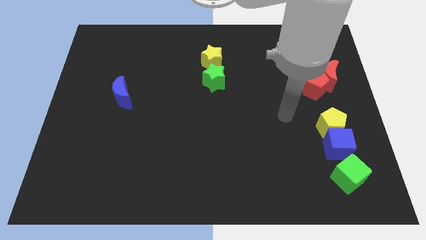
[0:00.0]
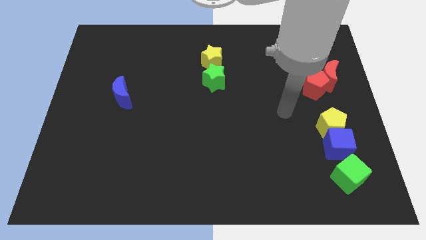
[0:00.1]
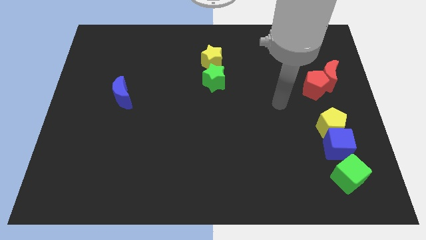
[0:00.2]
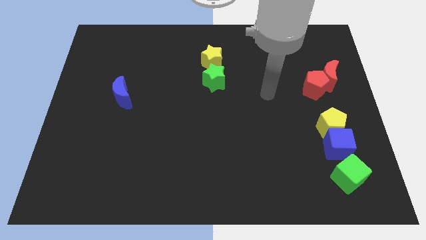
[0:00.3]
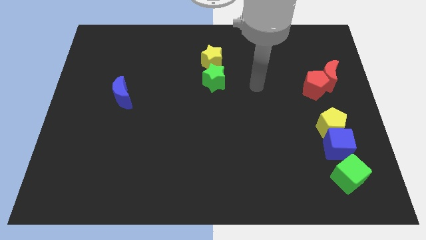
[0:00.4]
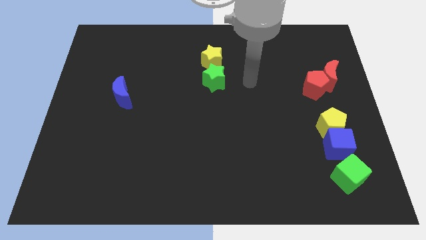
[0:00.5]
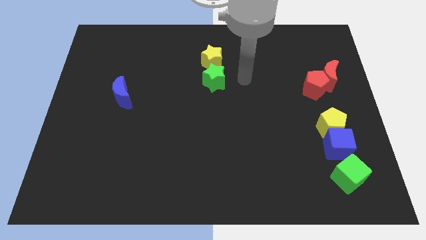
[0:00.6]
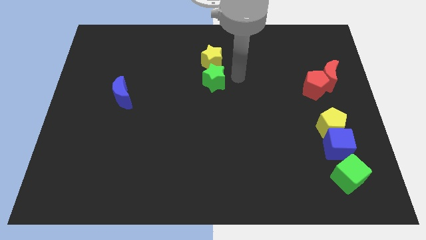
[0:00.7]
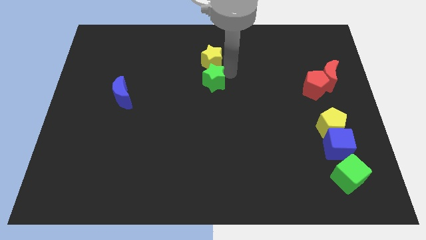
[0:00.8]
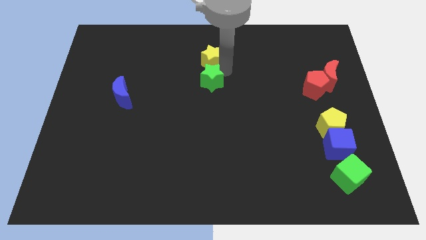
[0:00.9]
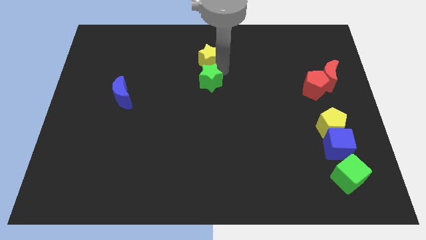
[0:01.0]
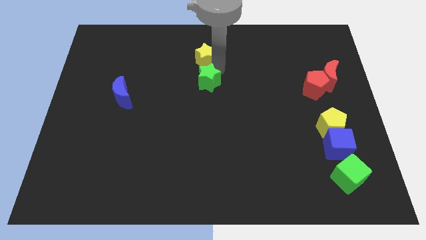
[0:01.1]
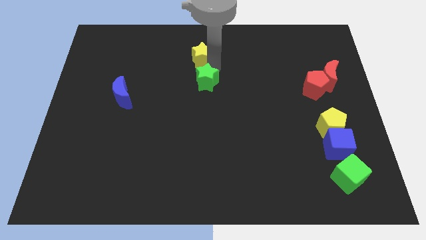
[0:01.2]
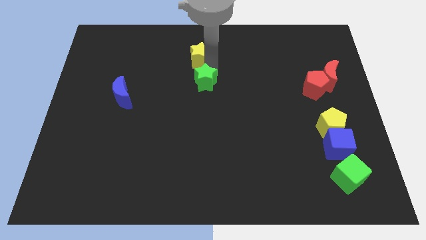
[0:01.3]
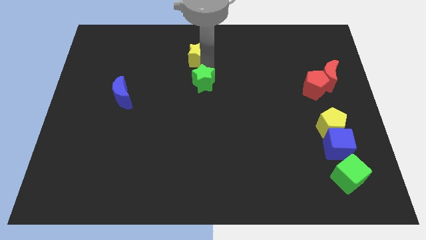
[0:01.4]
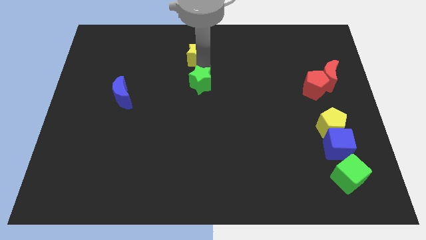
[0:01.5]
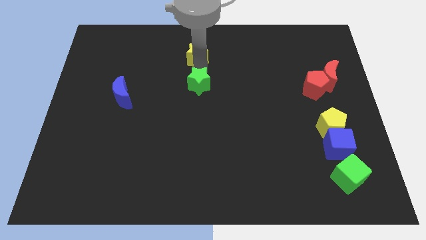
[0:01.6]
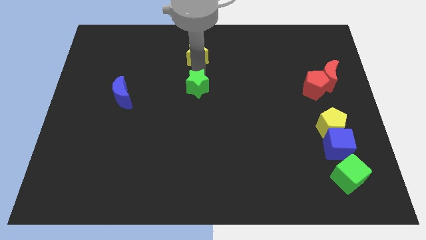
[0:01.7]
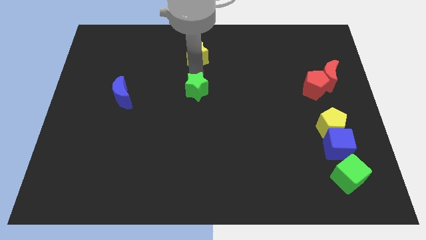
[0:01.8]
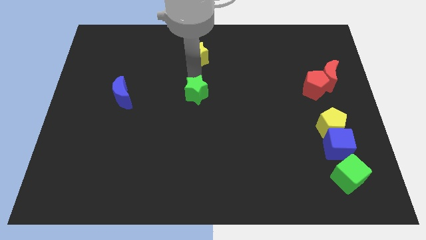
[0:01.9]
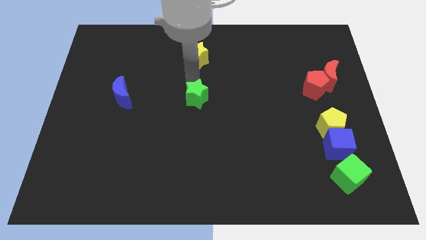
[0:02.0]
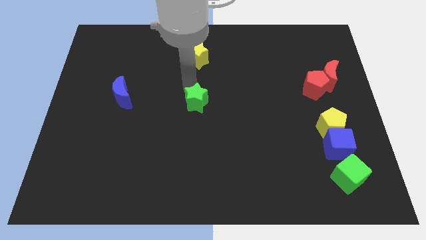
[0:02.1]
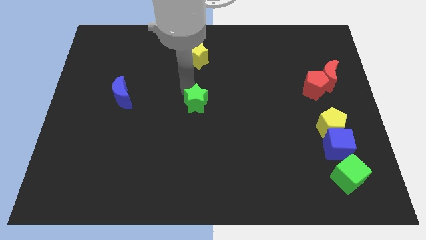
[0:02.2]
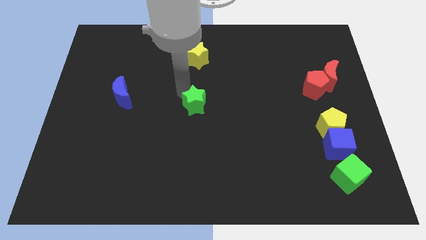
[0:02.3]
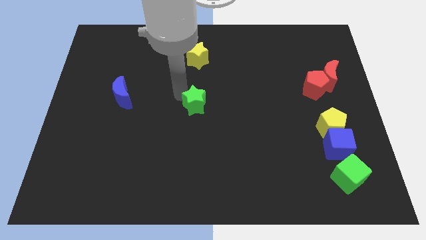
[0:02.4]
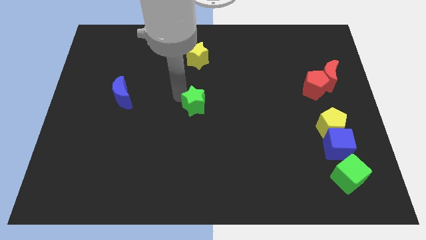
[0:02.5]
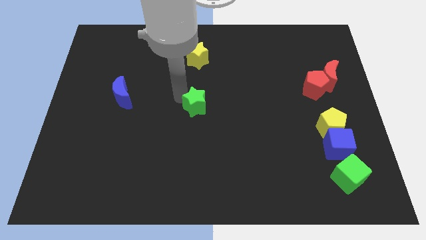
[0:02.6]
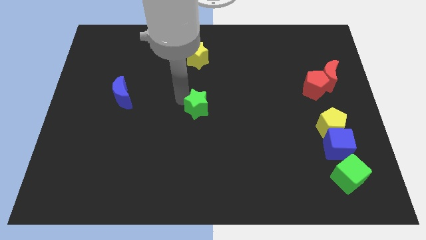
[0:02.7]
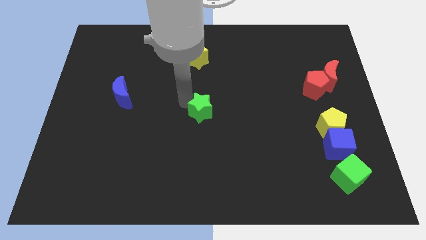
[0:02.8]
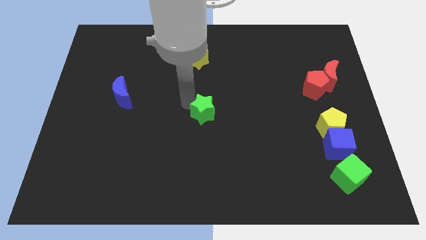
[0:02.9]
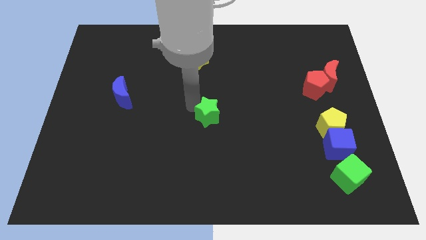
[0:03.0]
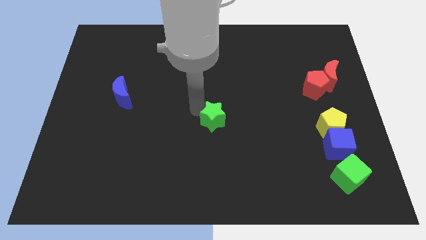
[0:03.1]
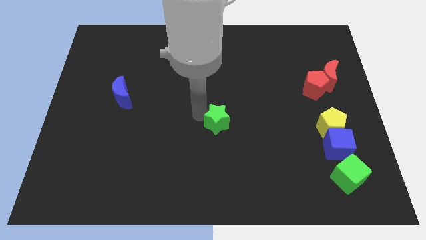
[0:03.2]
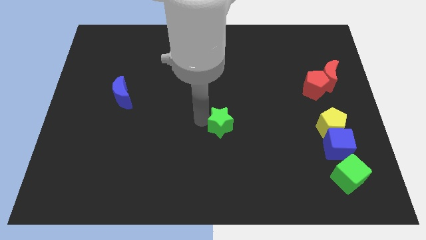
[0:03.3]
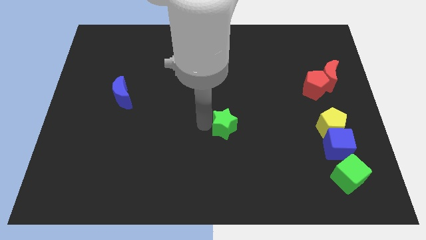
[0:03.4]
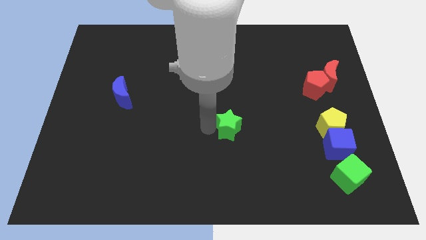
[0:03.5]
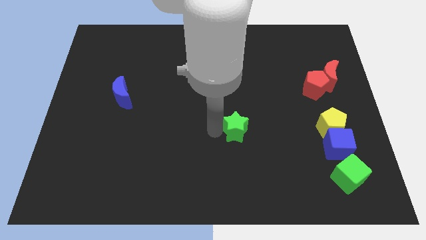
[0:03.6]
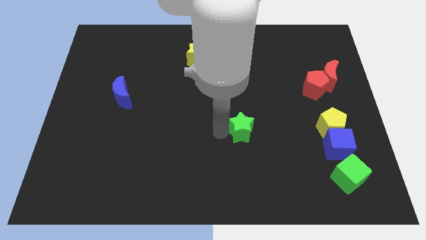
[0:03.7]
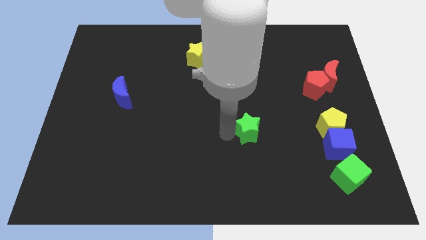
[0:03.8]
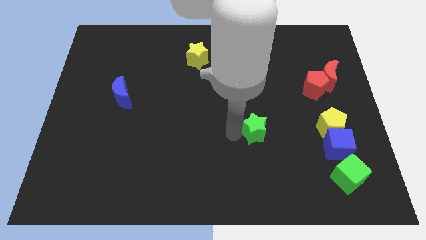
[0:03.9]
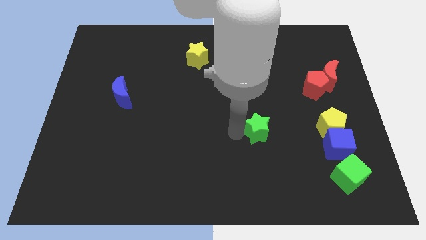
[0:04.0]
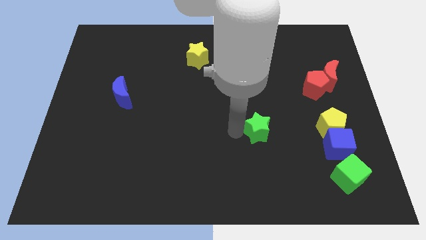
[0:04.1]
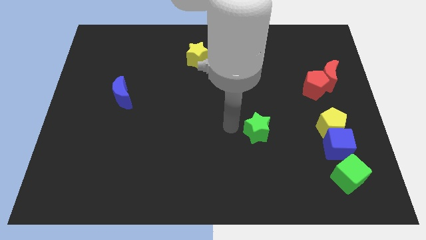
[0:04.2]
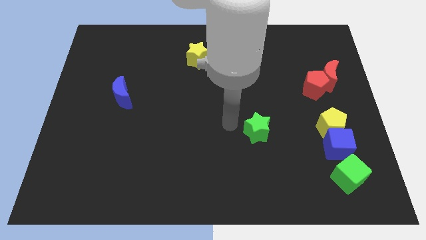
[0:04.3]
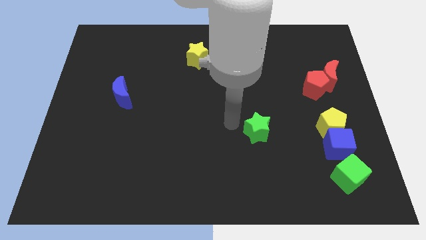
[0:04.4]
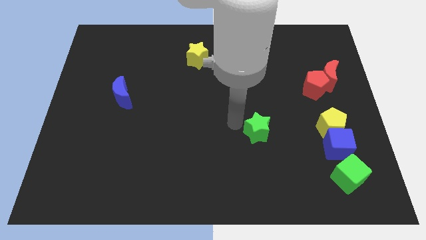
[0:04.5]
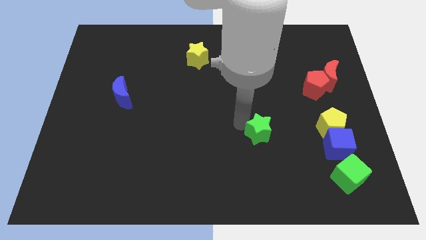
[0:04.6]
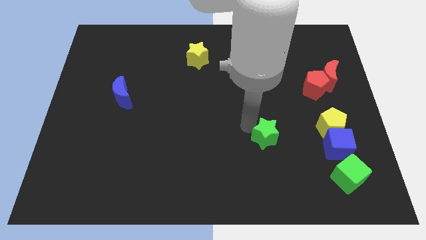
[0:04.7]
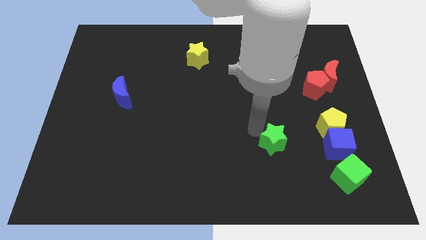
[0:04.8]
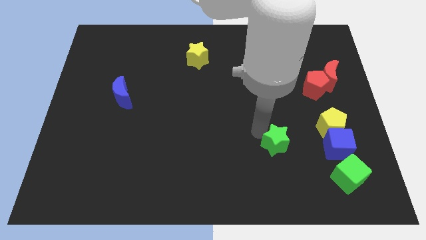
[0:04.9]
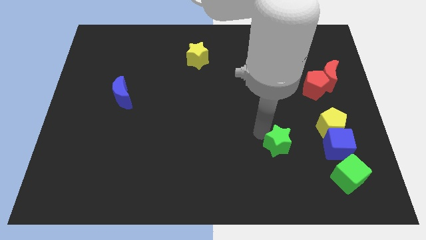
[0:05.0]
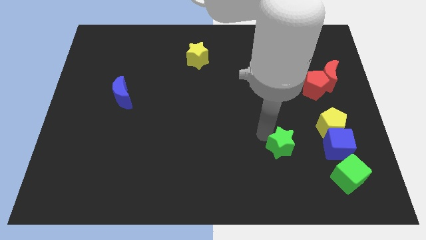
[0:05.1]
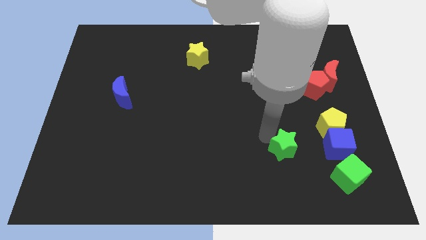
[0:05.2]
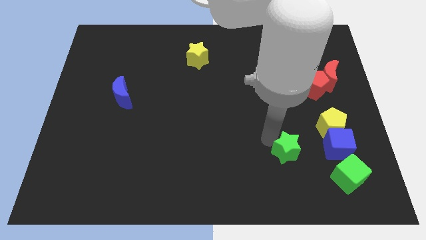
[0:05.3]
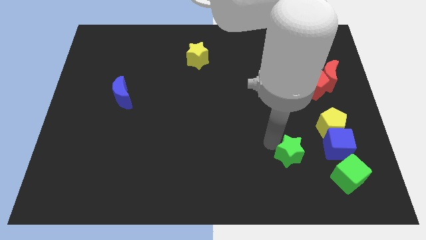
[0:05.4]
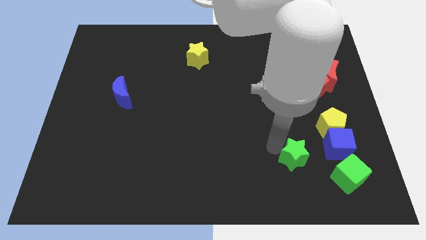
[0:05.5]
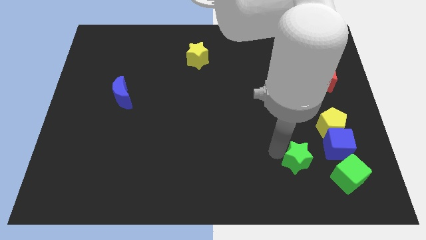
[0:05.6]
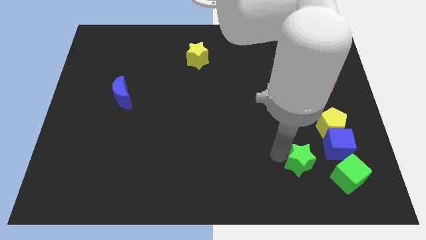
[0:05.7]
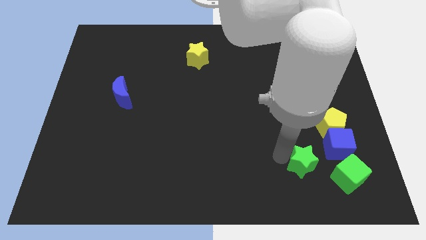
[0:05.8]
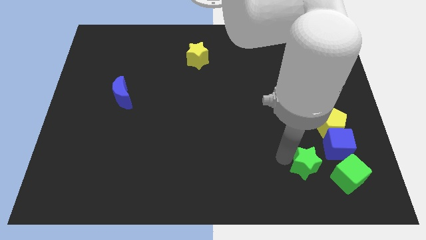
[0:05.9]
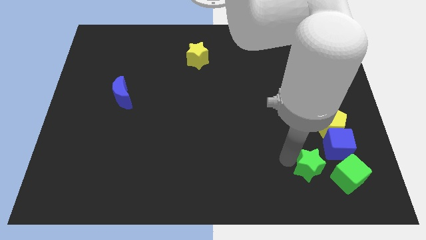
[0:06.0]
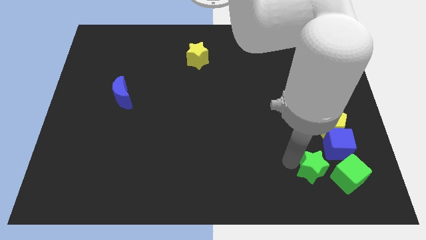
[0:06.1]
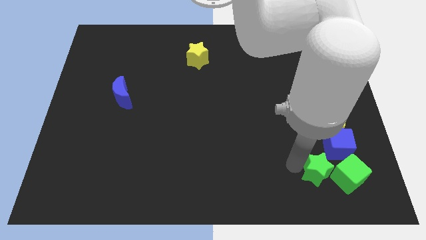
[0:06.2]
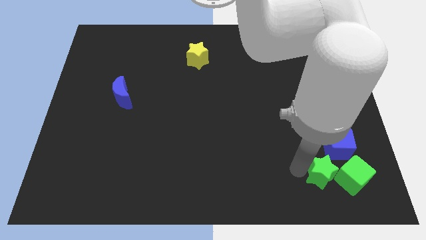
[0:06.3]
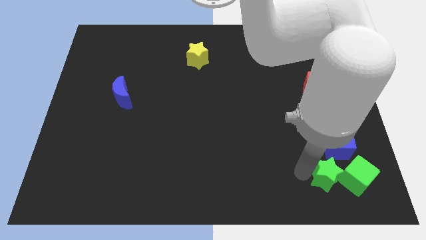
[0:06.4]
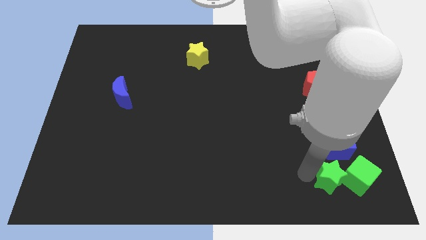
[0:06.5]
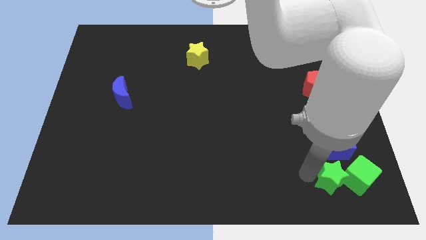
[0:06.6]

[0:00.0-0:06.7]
push the green star close to the green cube

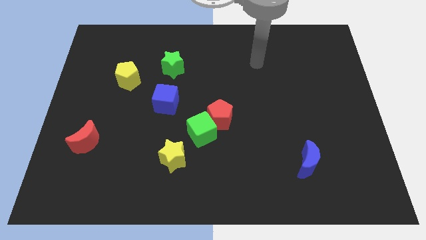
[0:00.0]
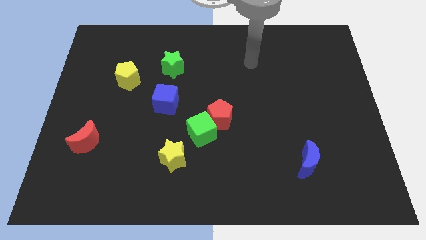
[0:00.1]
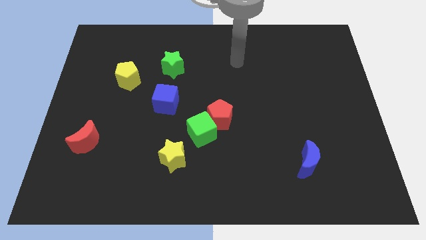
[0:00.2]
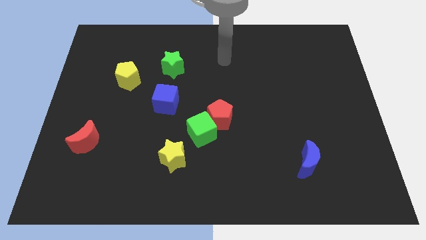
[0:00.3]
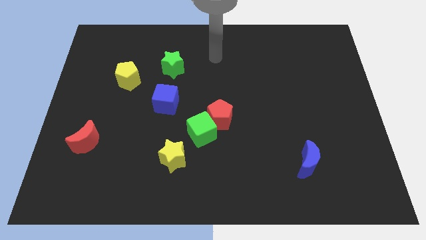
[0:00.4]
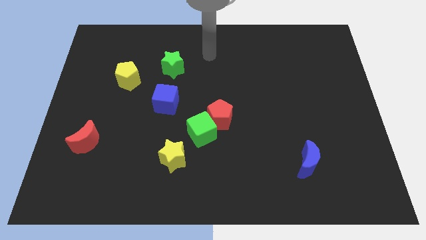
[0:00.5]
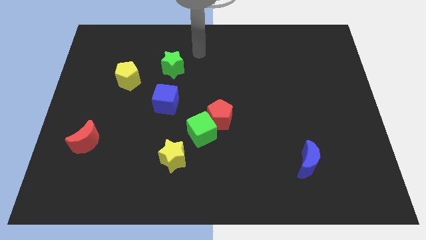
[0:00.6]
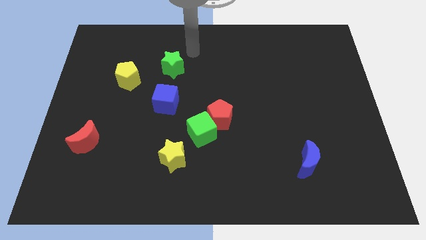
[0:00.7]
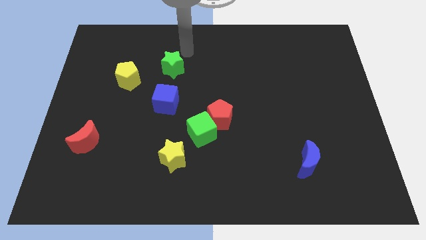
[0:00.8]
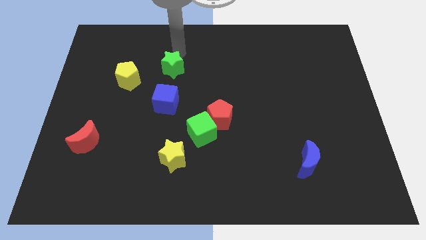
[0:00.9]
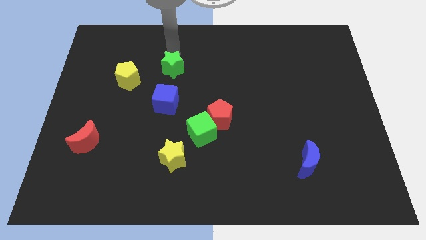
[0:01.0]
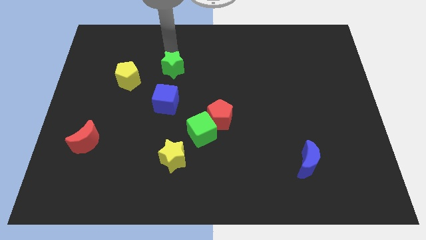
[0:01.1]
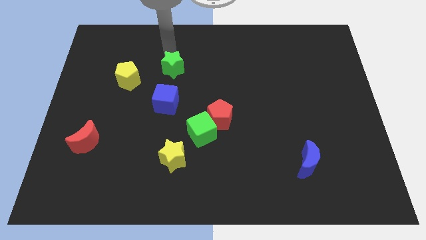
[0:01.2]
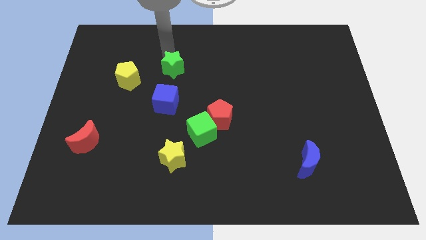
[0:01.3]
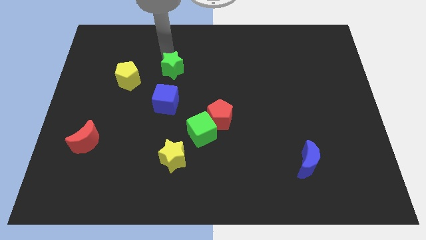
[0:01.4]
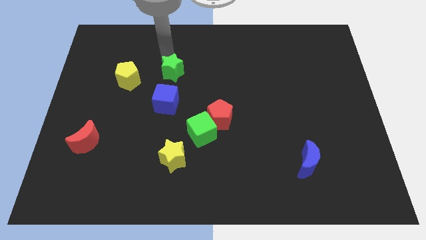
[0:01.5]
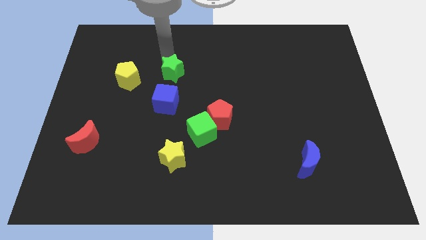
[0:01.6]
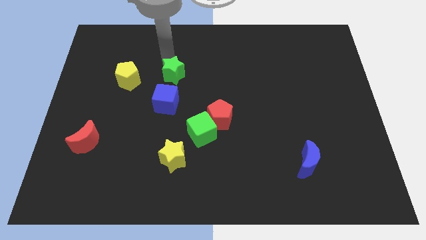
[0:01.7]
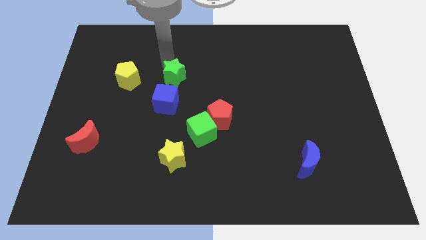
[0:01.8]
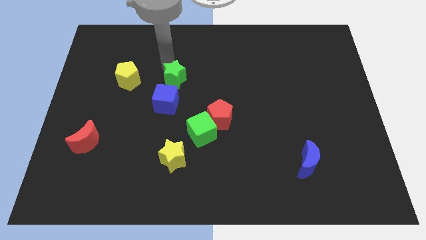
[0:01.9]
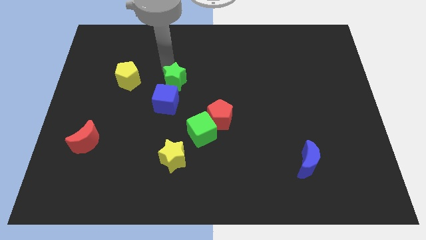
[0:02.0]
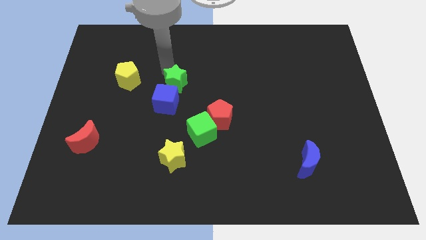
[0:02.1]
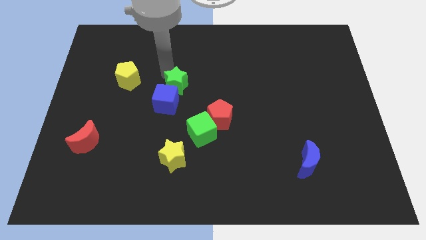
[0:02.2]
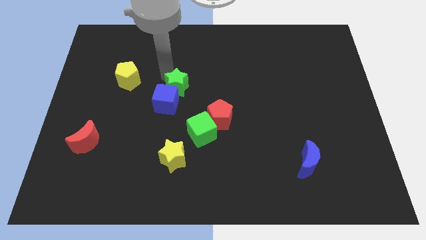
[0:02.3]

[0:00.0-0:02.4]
slide the green star to the blue cube
